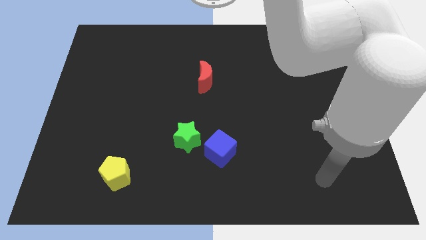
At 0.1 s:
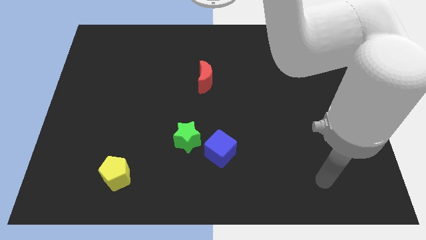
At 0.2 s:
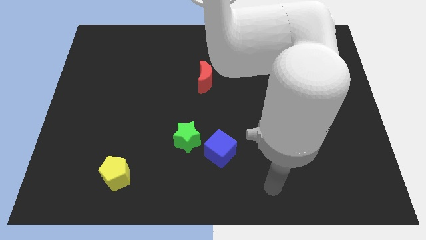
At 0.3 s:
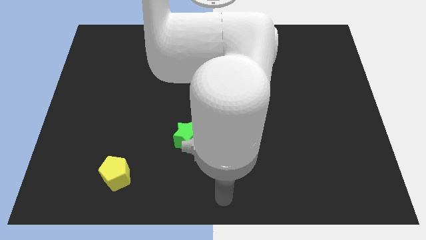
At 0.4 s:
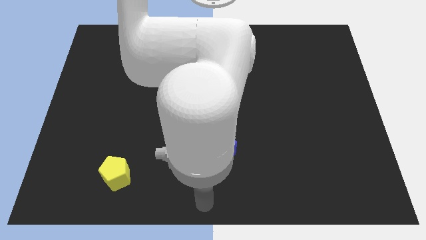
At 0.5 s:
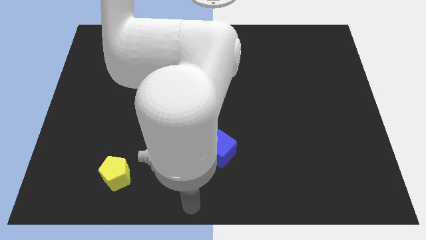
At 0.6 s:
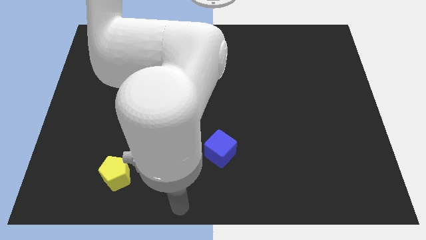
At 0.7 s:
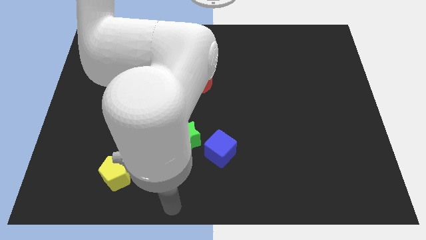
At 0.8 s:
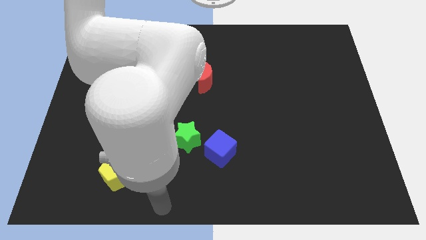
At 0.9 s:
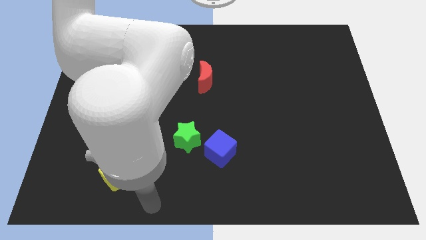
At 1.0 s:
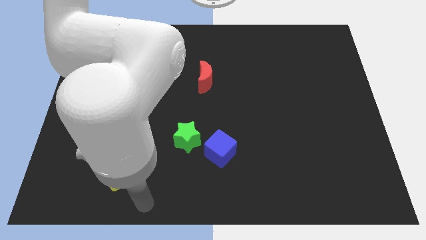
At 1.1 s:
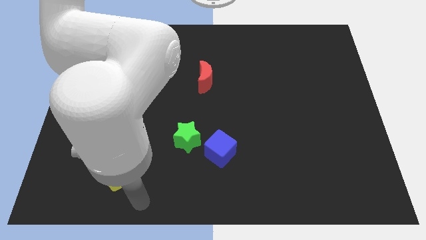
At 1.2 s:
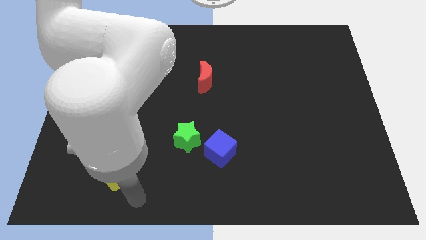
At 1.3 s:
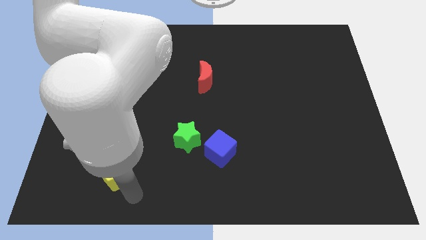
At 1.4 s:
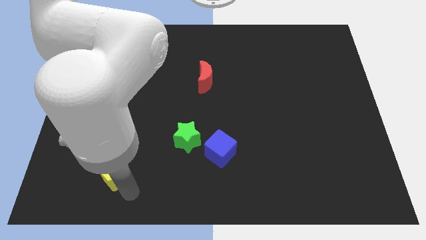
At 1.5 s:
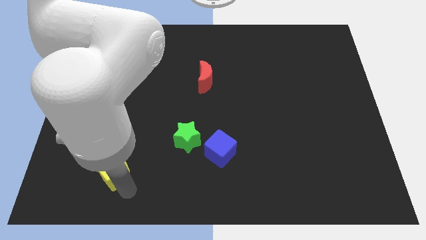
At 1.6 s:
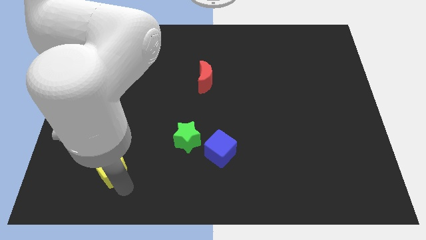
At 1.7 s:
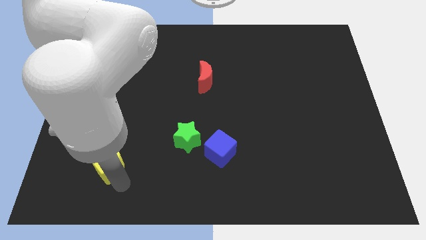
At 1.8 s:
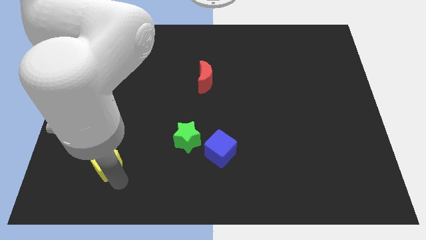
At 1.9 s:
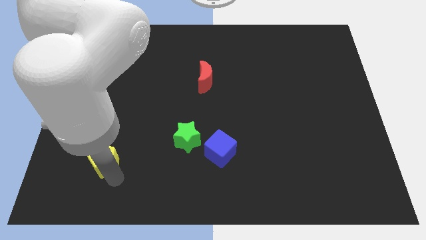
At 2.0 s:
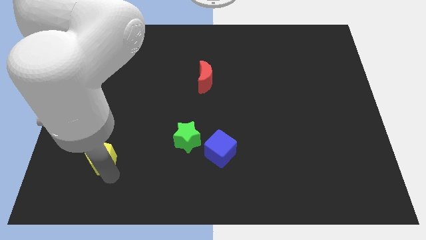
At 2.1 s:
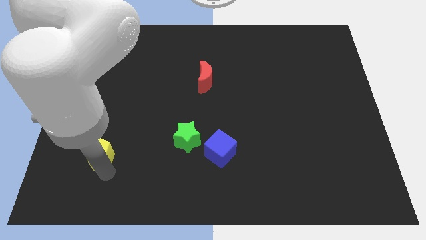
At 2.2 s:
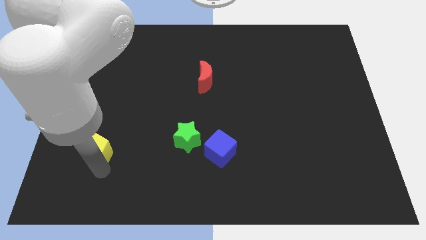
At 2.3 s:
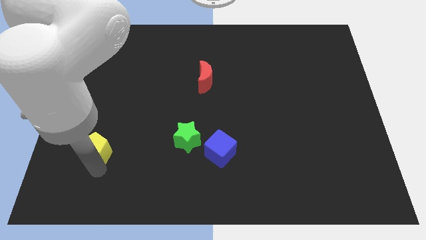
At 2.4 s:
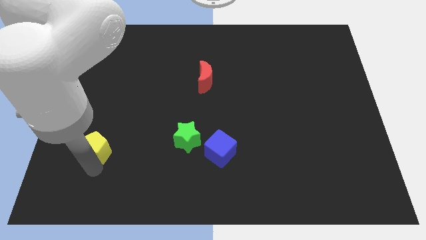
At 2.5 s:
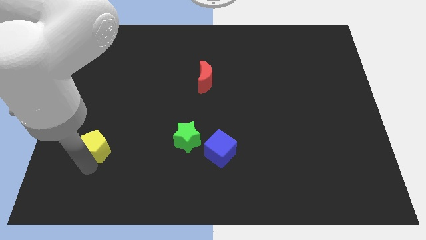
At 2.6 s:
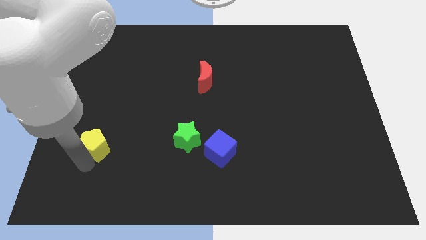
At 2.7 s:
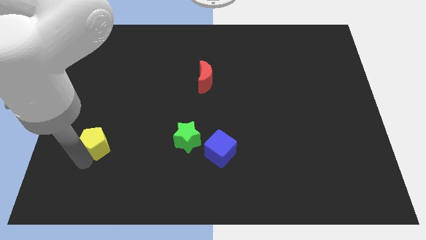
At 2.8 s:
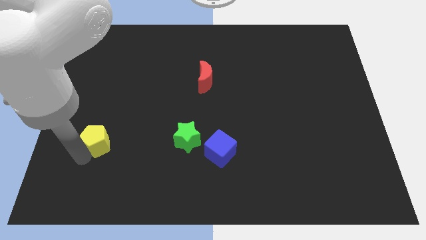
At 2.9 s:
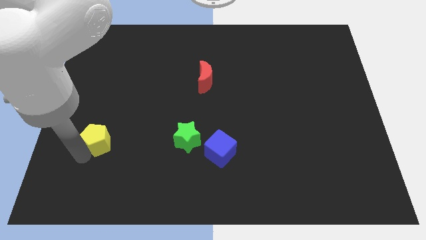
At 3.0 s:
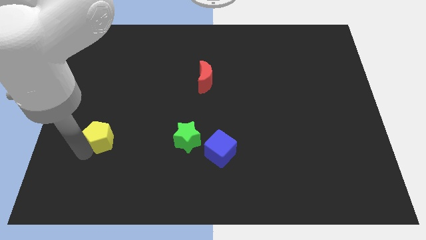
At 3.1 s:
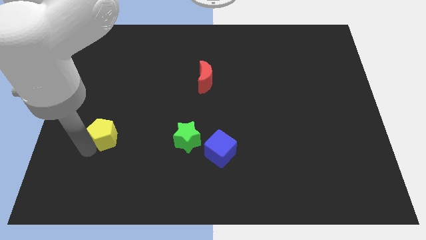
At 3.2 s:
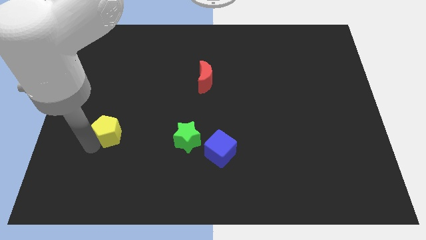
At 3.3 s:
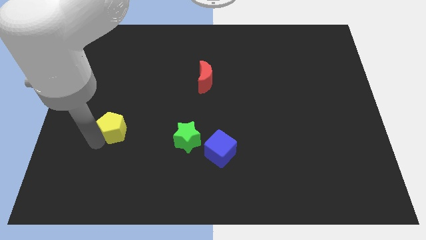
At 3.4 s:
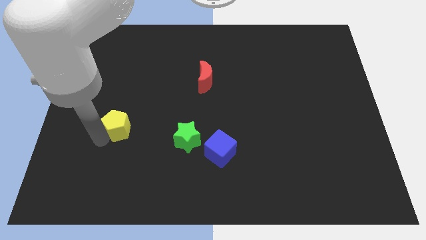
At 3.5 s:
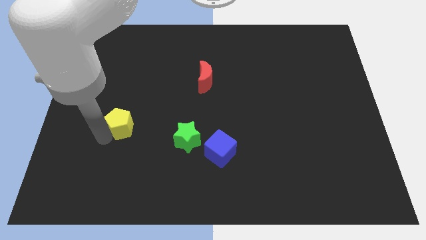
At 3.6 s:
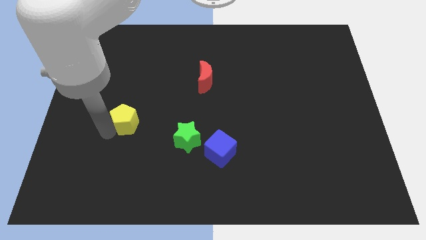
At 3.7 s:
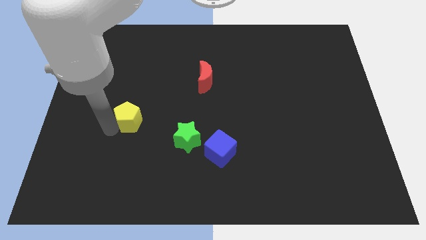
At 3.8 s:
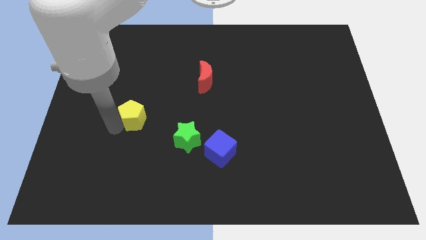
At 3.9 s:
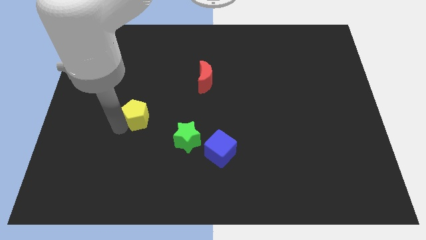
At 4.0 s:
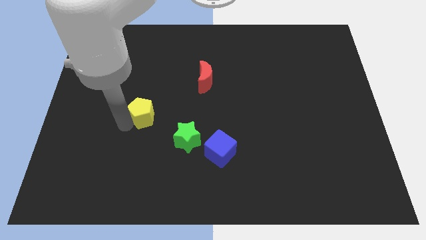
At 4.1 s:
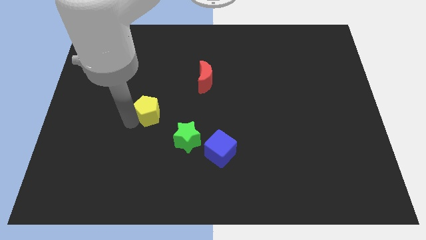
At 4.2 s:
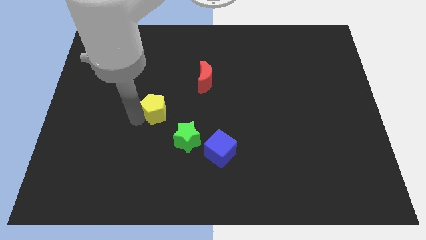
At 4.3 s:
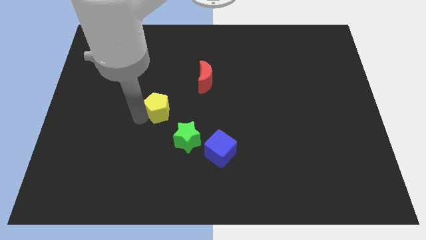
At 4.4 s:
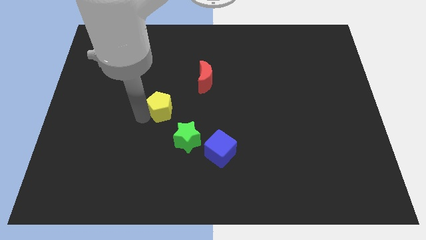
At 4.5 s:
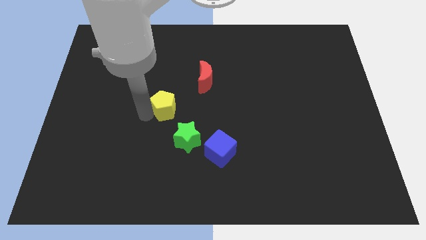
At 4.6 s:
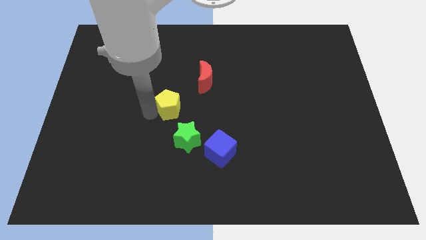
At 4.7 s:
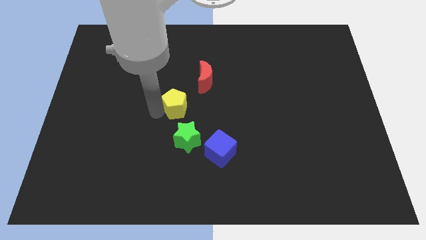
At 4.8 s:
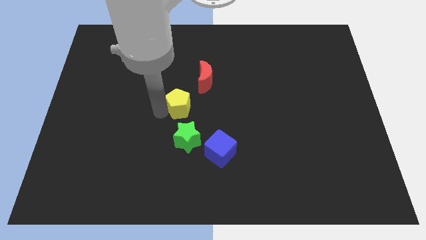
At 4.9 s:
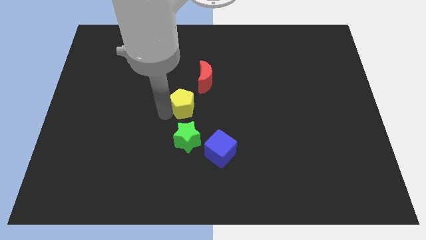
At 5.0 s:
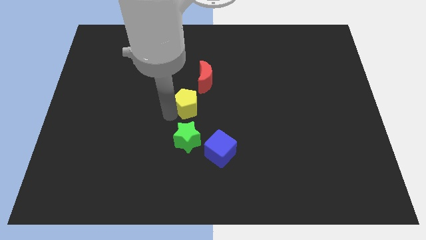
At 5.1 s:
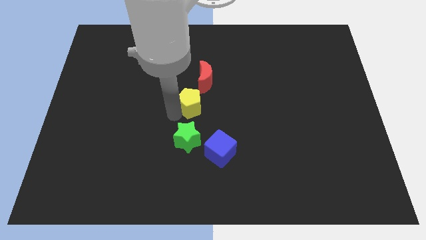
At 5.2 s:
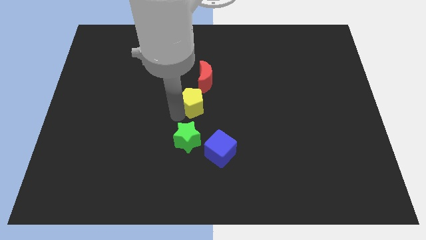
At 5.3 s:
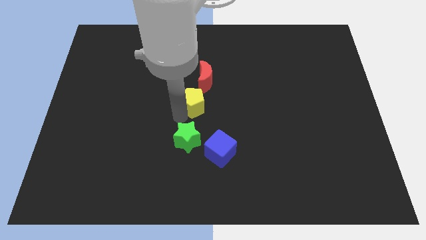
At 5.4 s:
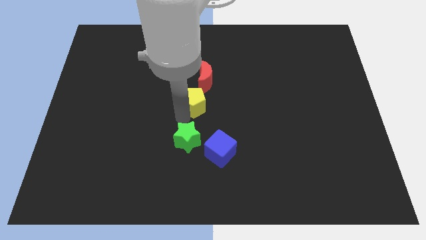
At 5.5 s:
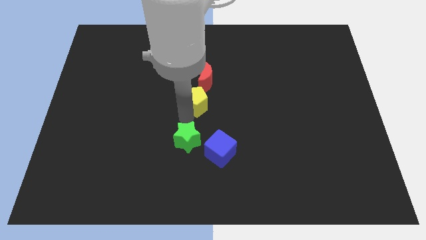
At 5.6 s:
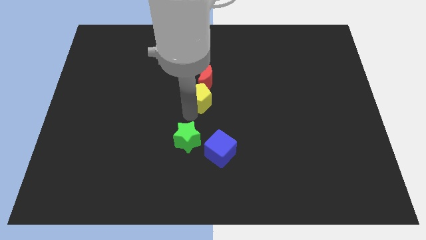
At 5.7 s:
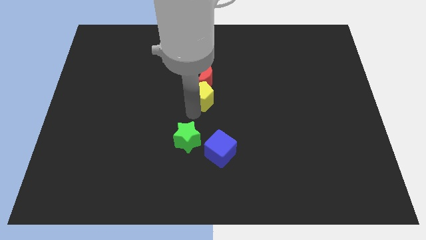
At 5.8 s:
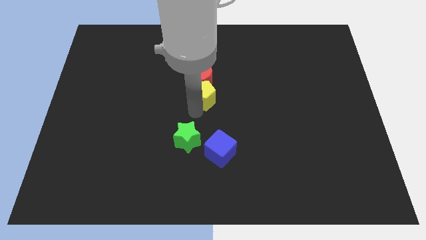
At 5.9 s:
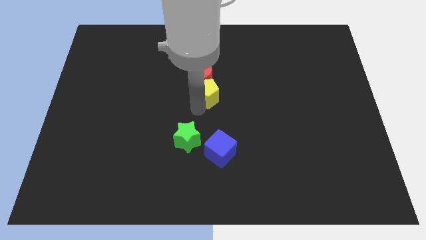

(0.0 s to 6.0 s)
slide the pentagon close to the moon

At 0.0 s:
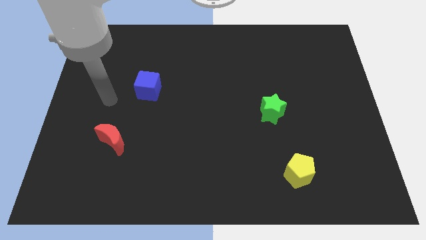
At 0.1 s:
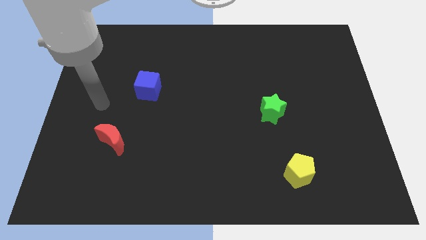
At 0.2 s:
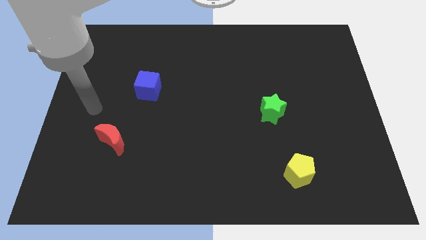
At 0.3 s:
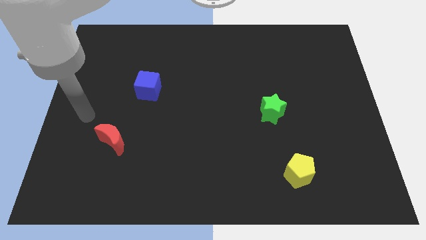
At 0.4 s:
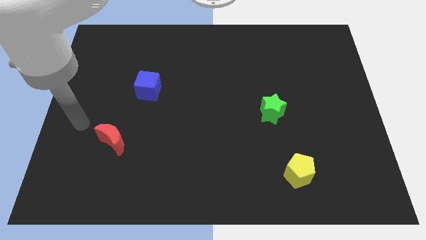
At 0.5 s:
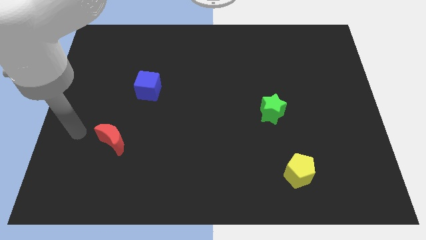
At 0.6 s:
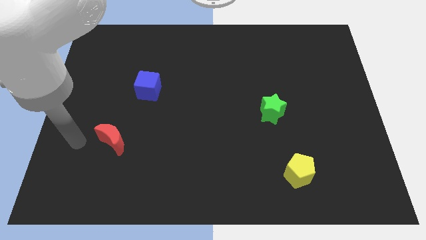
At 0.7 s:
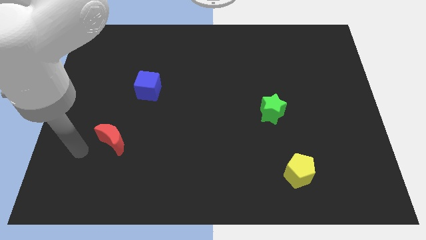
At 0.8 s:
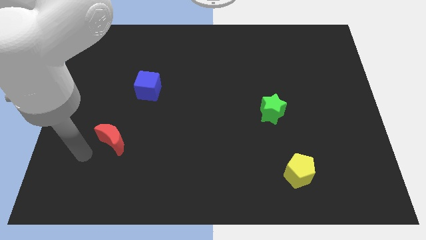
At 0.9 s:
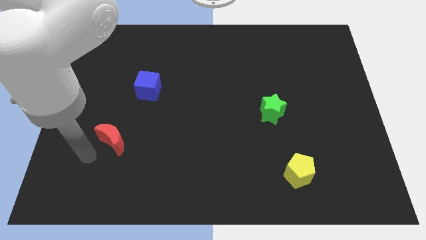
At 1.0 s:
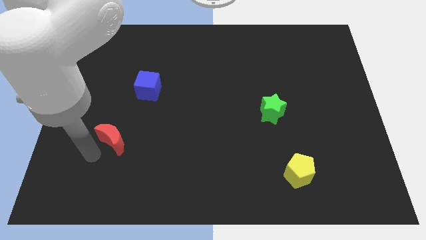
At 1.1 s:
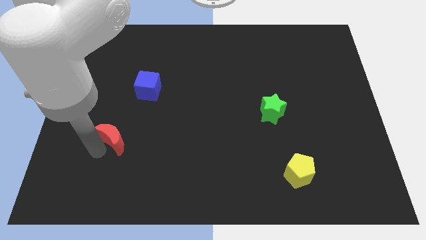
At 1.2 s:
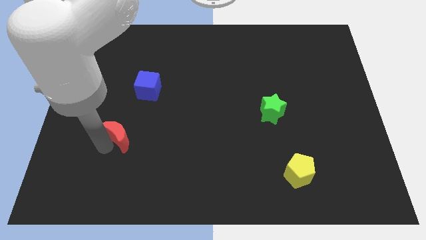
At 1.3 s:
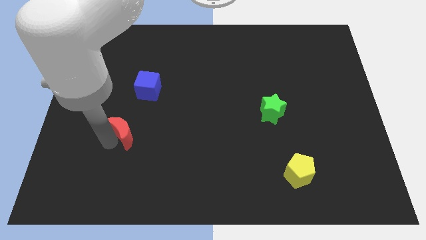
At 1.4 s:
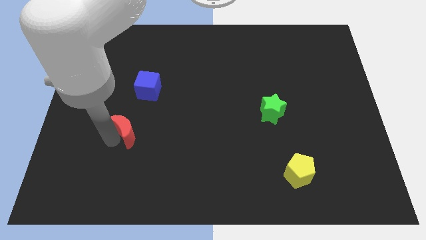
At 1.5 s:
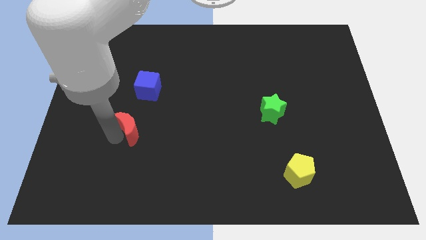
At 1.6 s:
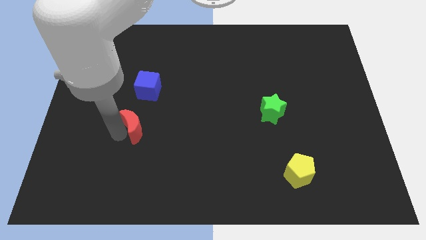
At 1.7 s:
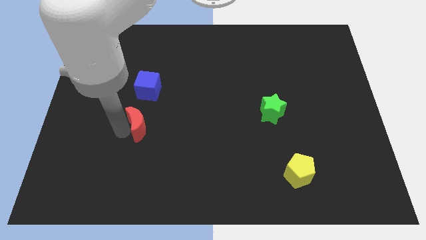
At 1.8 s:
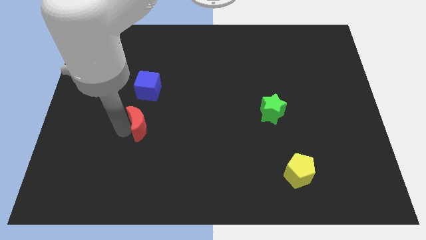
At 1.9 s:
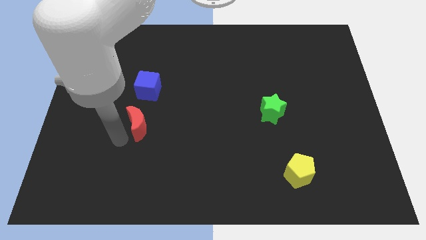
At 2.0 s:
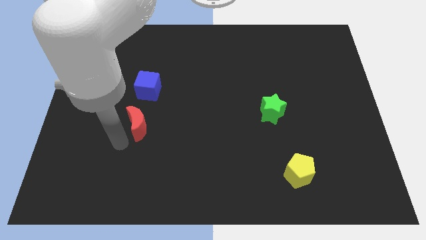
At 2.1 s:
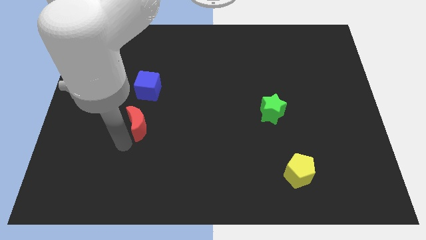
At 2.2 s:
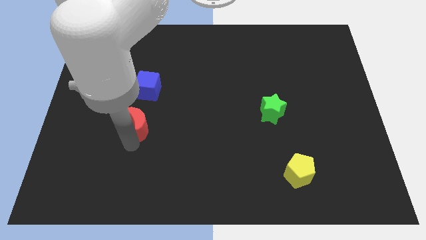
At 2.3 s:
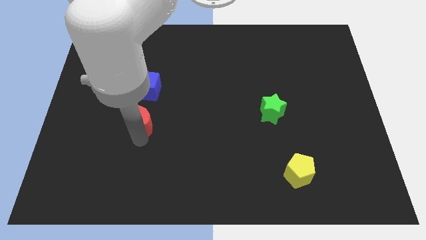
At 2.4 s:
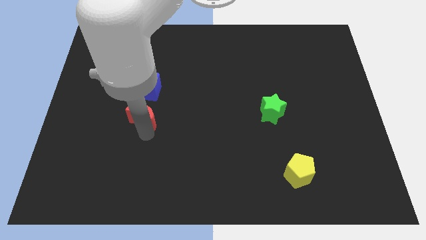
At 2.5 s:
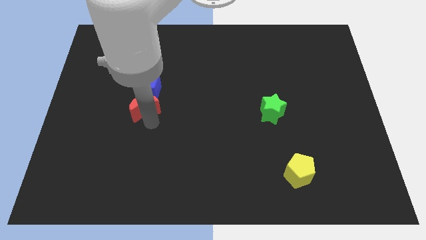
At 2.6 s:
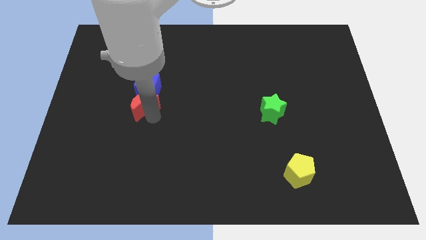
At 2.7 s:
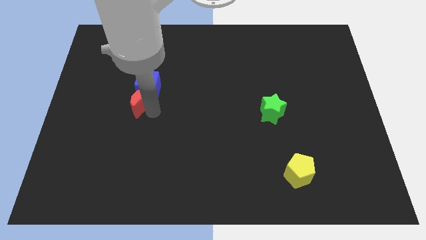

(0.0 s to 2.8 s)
slide the red block close to the cube
